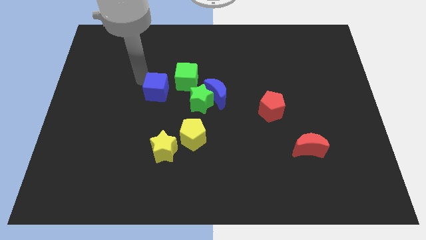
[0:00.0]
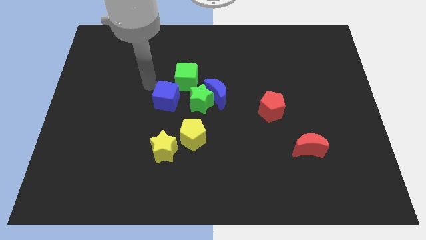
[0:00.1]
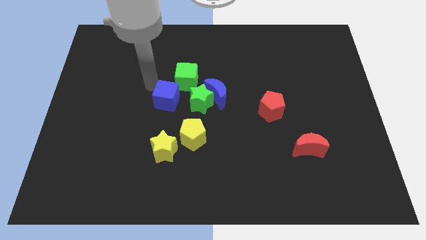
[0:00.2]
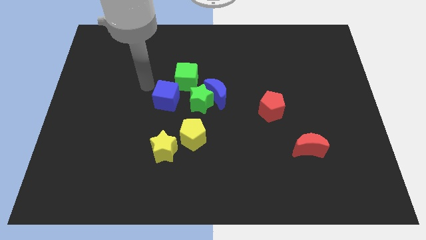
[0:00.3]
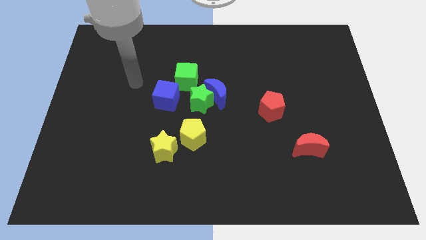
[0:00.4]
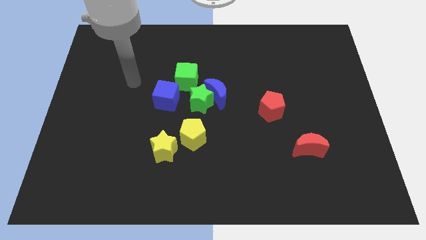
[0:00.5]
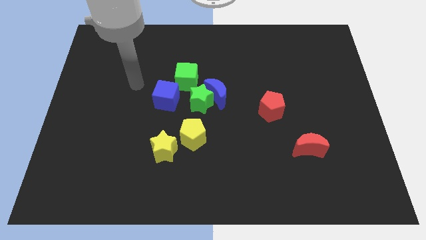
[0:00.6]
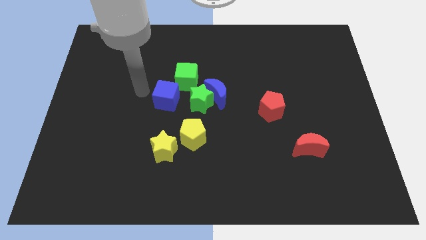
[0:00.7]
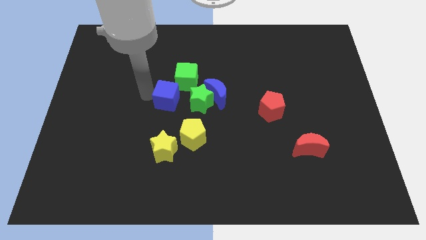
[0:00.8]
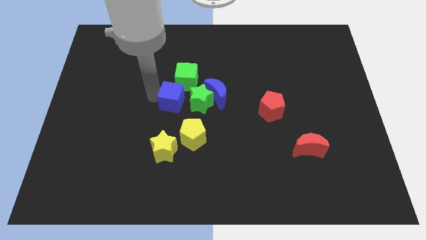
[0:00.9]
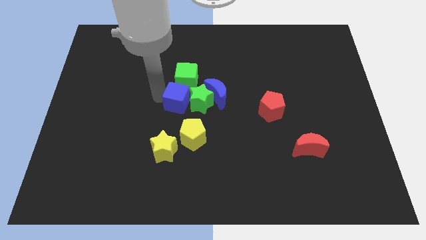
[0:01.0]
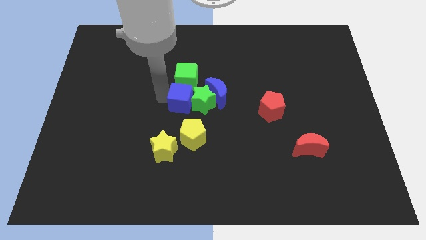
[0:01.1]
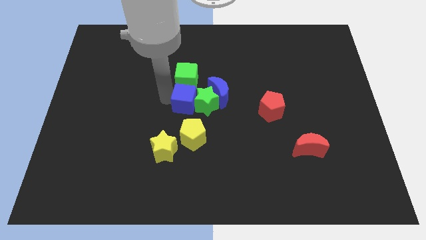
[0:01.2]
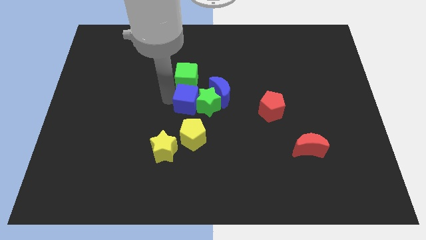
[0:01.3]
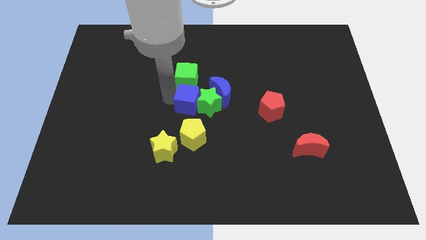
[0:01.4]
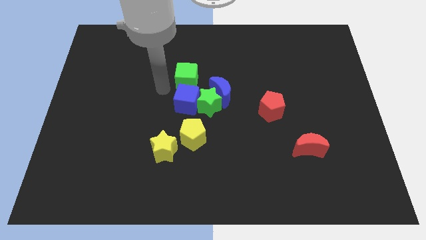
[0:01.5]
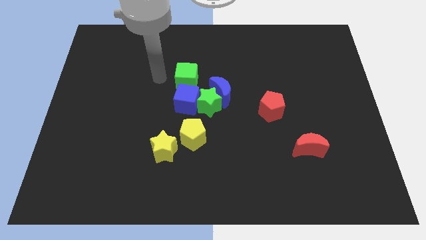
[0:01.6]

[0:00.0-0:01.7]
push the blue cube below the green cube

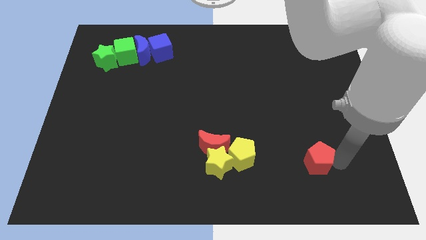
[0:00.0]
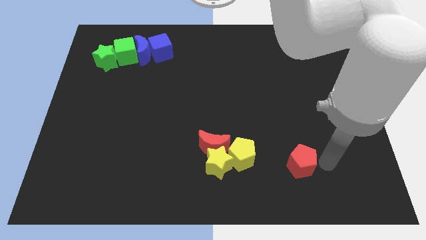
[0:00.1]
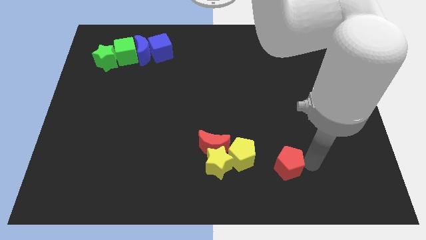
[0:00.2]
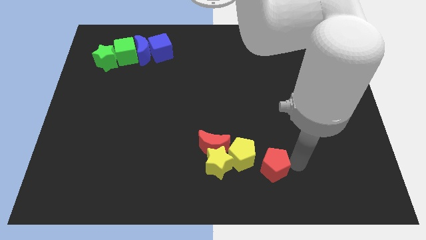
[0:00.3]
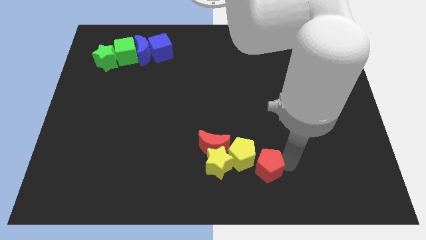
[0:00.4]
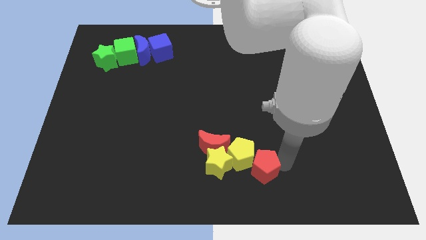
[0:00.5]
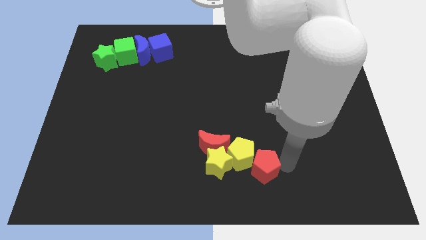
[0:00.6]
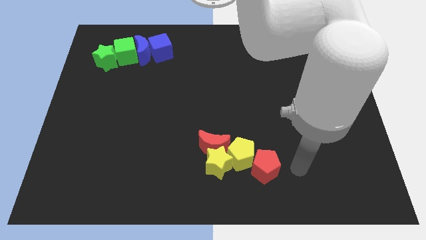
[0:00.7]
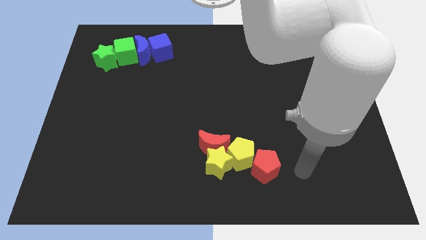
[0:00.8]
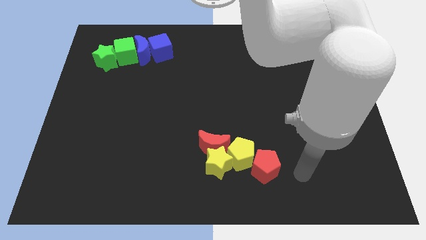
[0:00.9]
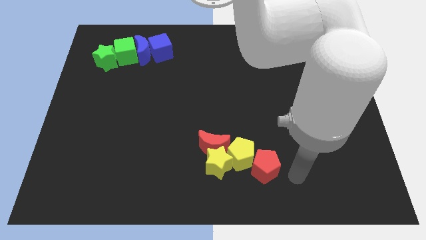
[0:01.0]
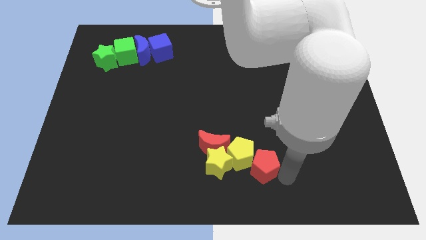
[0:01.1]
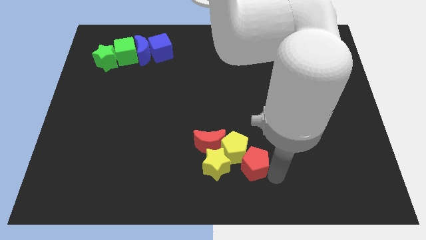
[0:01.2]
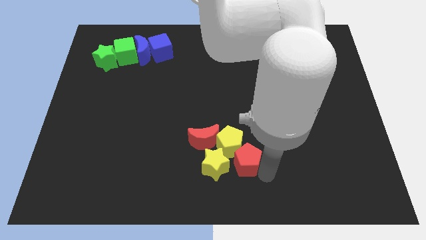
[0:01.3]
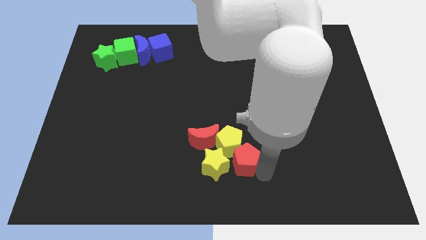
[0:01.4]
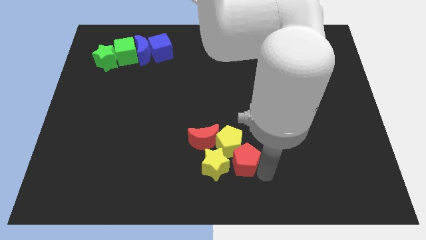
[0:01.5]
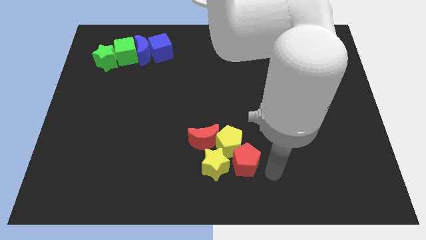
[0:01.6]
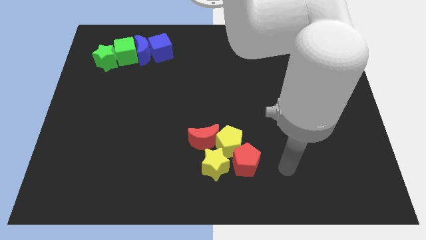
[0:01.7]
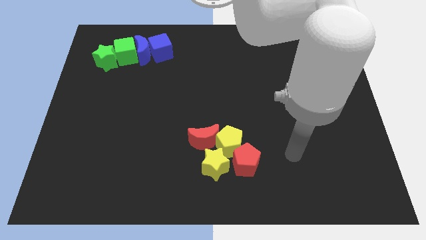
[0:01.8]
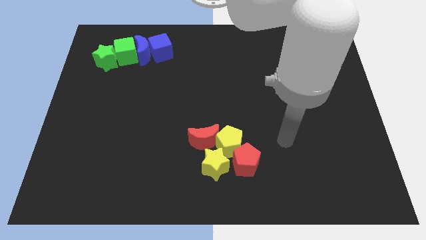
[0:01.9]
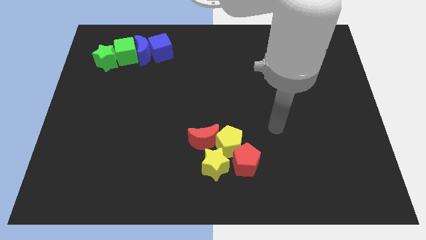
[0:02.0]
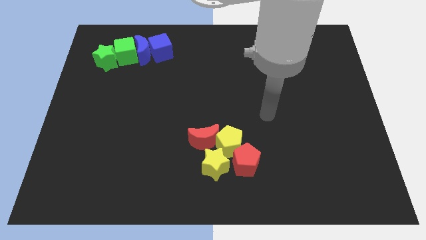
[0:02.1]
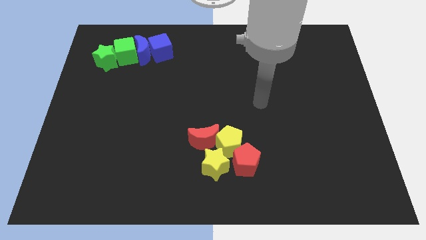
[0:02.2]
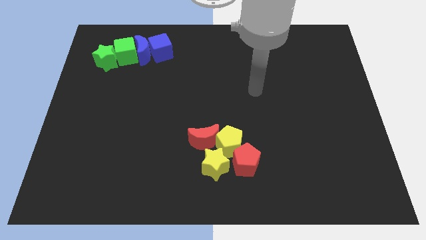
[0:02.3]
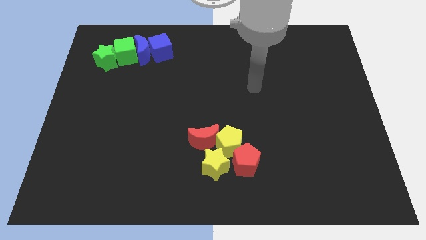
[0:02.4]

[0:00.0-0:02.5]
put the red pentagon at the bottom right of the yellow pentagon

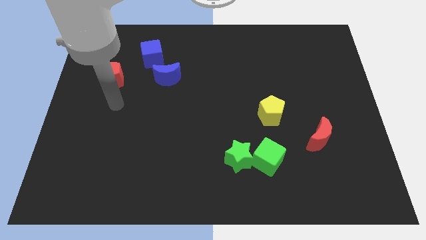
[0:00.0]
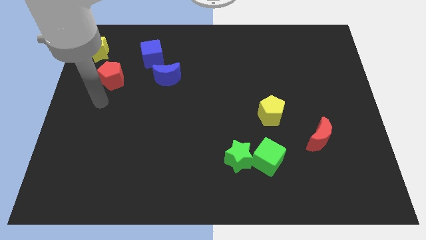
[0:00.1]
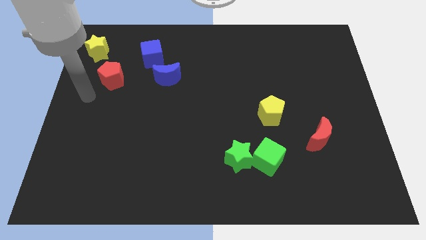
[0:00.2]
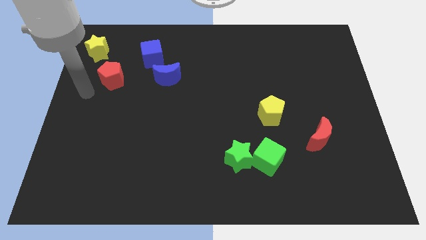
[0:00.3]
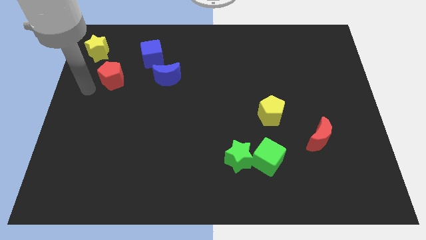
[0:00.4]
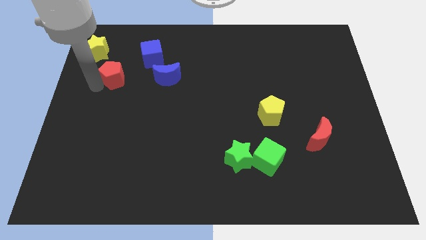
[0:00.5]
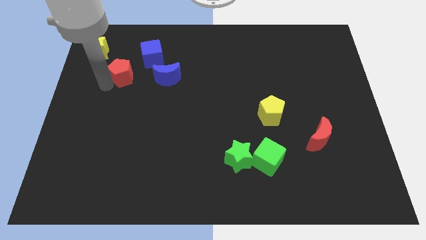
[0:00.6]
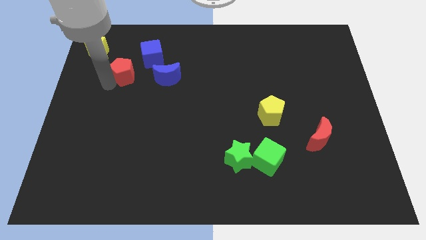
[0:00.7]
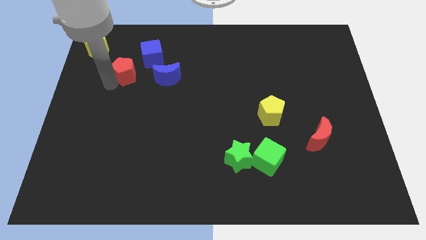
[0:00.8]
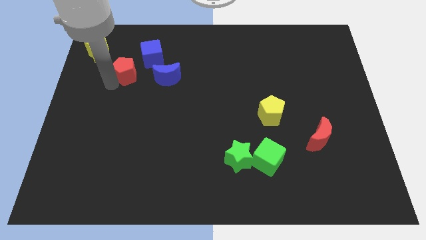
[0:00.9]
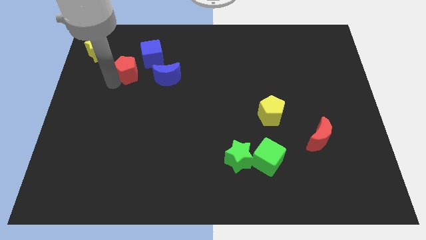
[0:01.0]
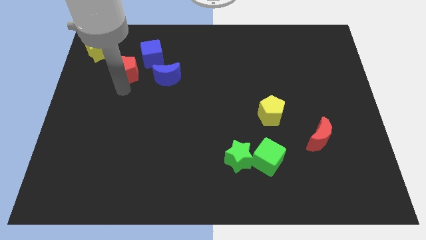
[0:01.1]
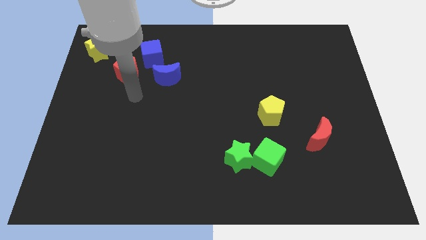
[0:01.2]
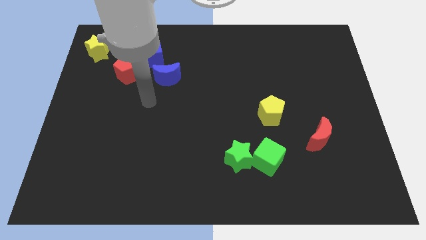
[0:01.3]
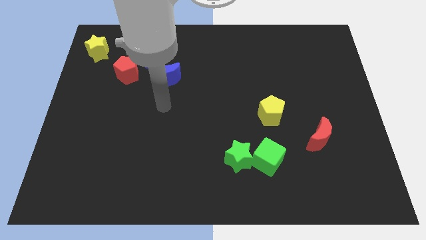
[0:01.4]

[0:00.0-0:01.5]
place red pentagon to the bottom left of blue cube

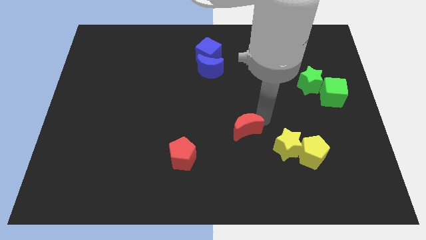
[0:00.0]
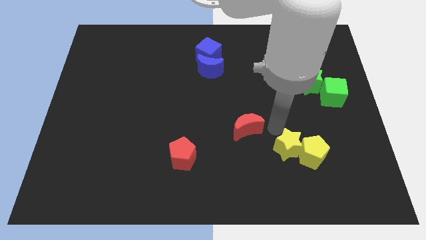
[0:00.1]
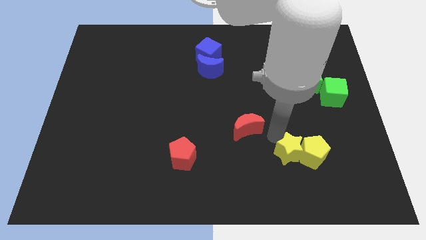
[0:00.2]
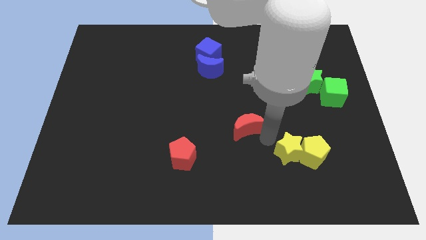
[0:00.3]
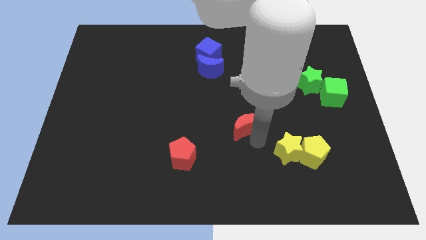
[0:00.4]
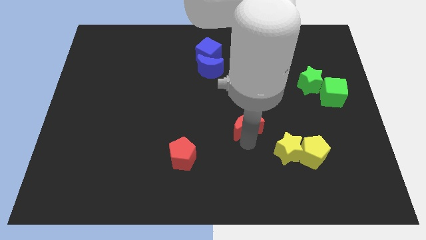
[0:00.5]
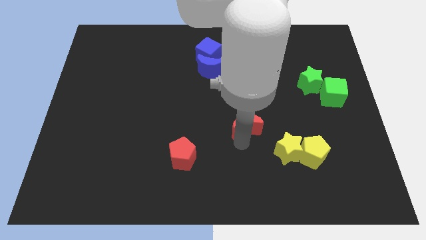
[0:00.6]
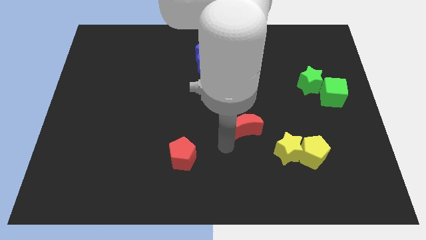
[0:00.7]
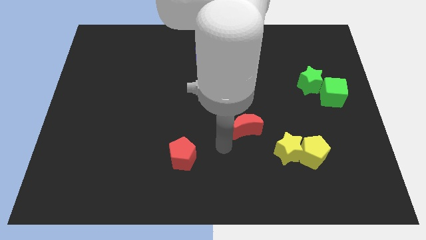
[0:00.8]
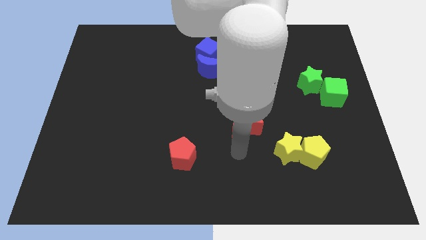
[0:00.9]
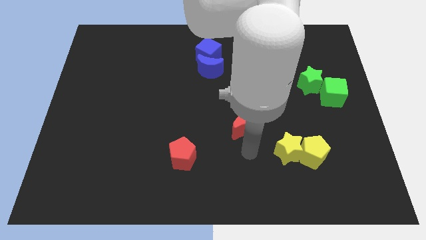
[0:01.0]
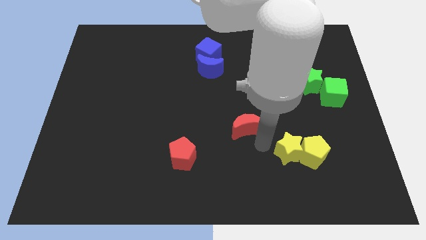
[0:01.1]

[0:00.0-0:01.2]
move your hand below the red crescent

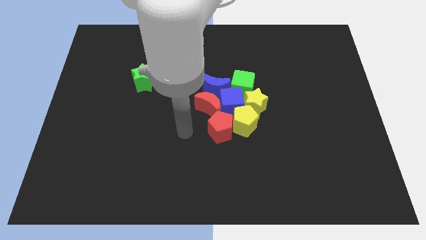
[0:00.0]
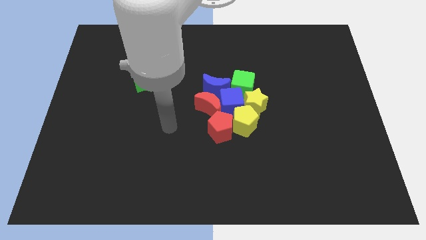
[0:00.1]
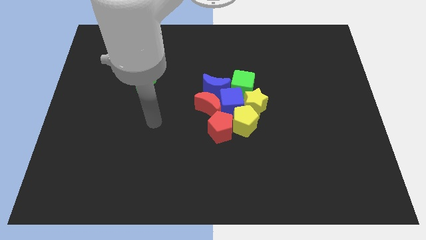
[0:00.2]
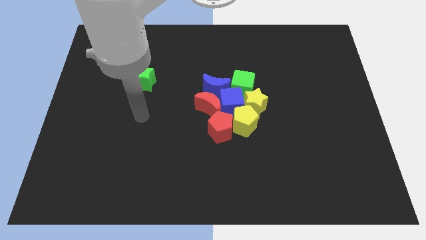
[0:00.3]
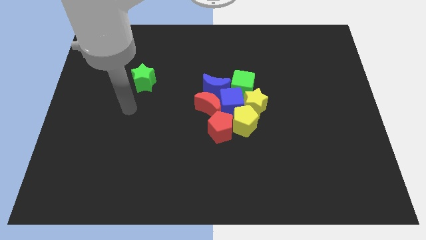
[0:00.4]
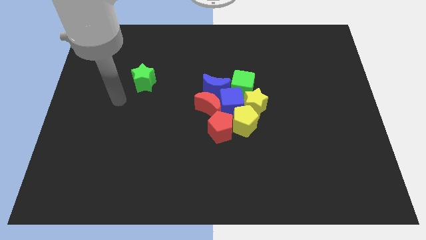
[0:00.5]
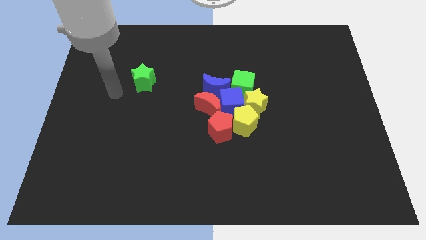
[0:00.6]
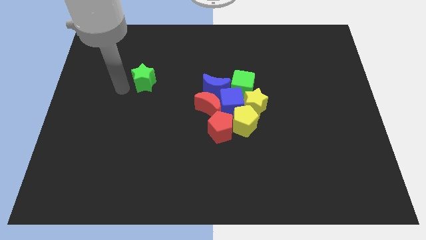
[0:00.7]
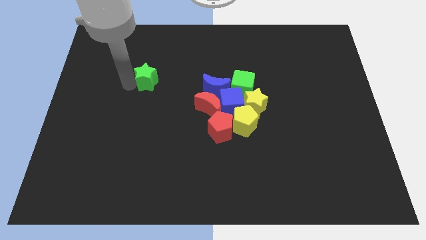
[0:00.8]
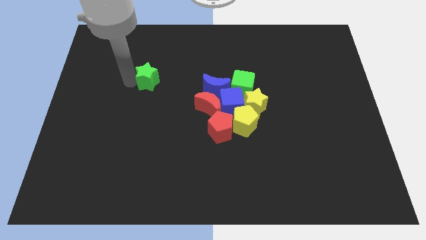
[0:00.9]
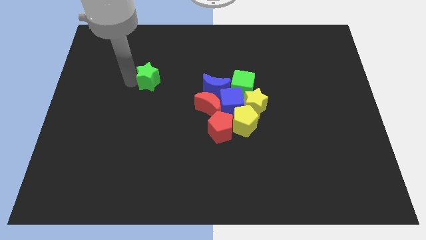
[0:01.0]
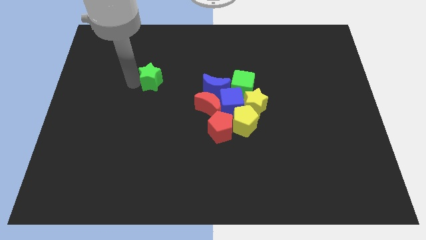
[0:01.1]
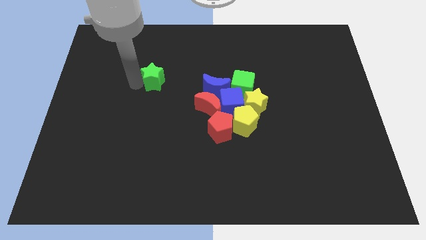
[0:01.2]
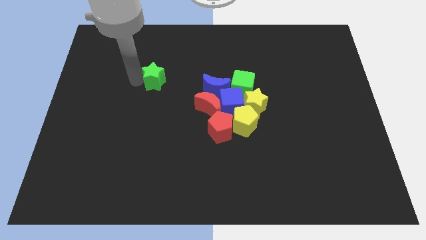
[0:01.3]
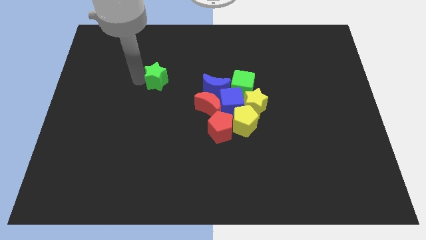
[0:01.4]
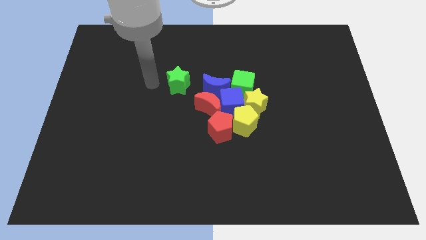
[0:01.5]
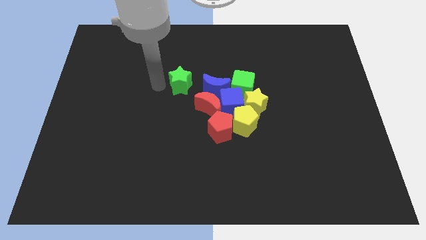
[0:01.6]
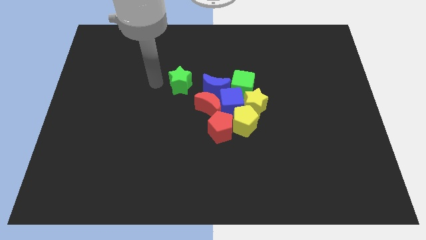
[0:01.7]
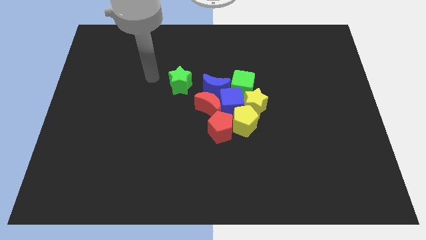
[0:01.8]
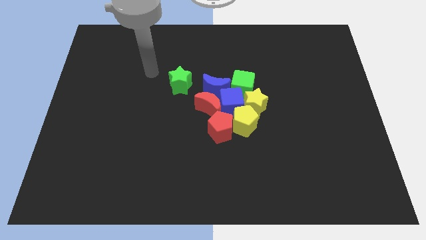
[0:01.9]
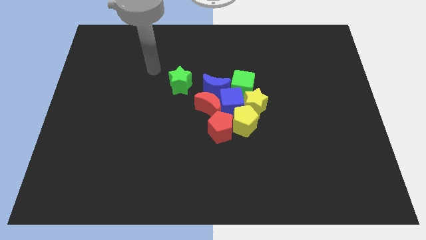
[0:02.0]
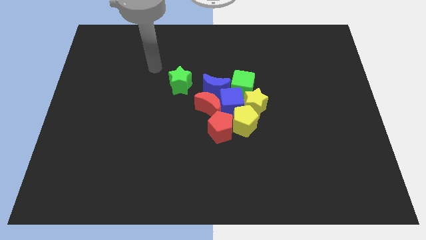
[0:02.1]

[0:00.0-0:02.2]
slightly push the green star
